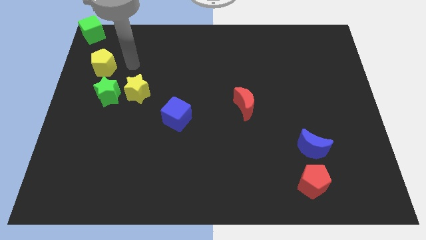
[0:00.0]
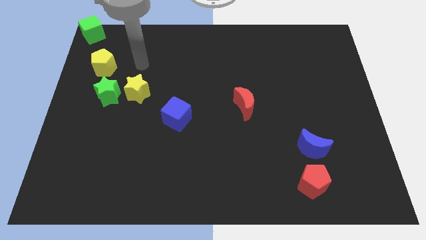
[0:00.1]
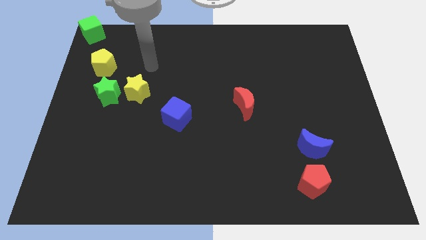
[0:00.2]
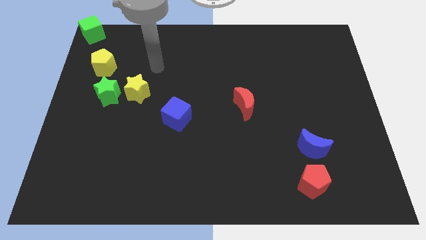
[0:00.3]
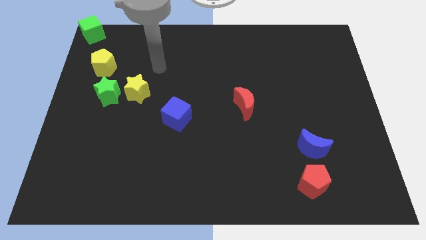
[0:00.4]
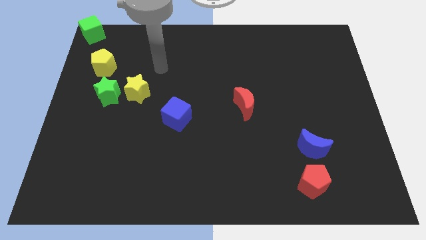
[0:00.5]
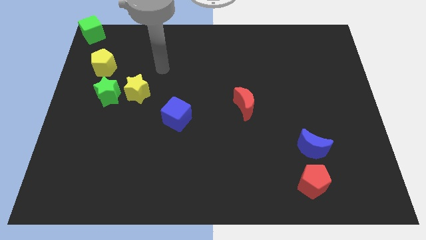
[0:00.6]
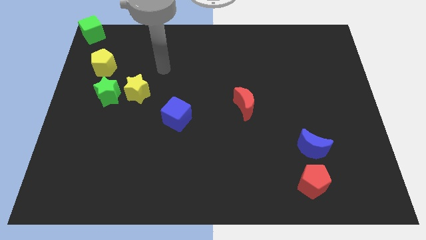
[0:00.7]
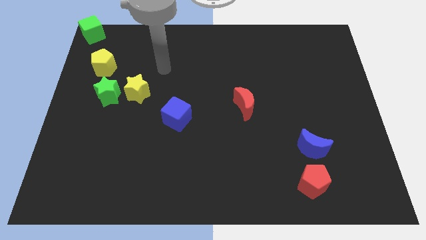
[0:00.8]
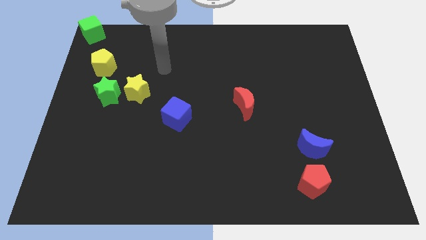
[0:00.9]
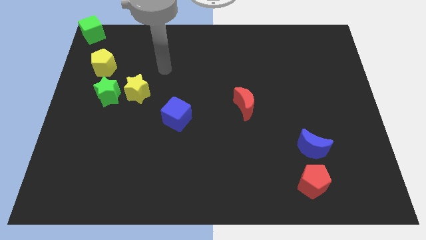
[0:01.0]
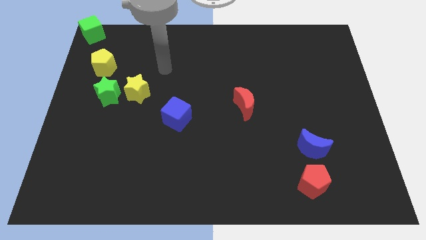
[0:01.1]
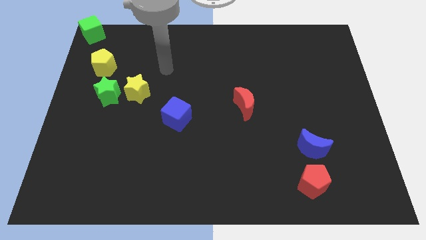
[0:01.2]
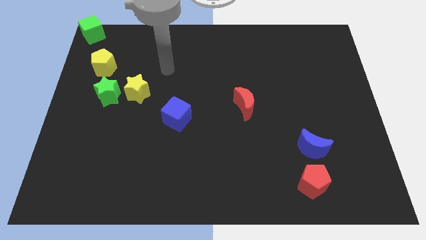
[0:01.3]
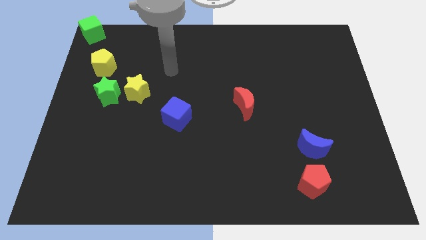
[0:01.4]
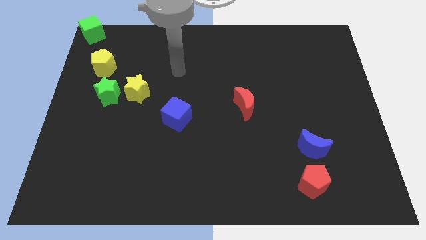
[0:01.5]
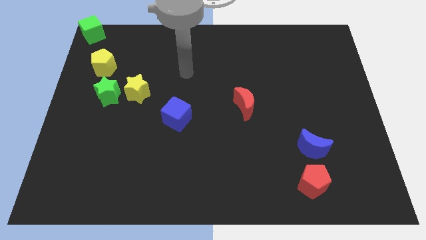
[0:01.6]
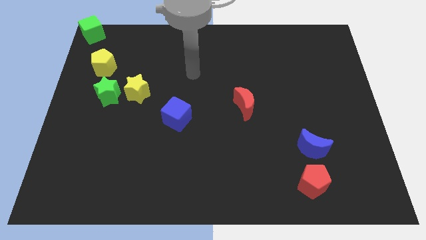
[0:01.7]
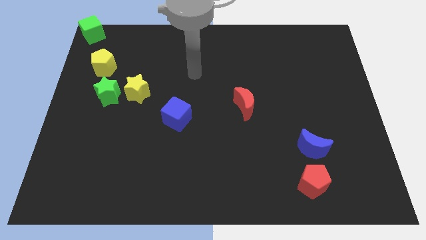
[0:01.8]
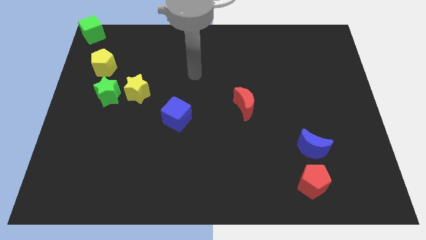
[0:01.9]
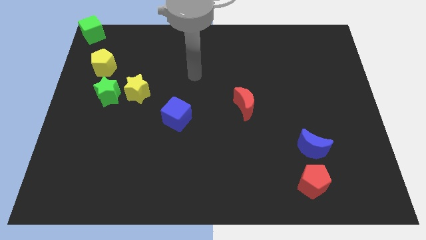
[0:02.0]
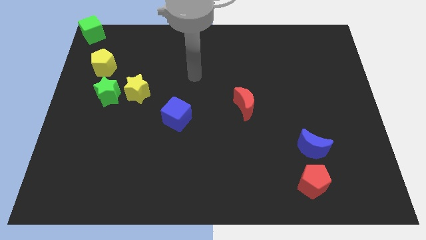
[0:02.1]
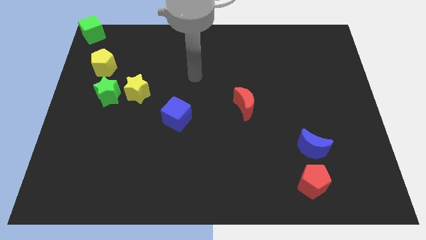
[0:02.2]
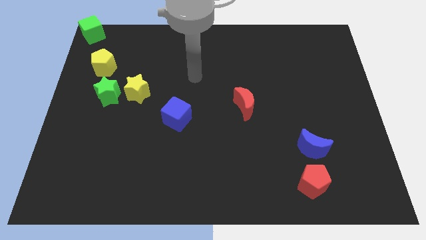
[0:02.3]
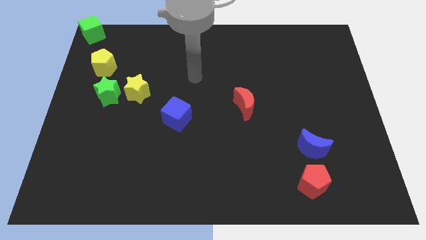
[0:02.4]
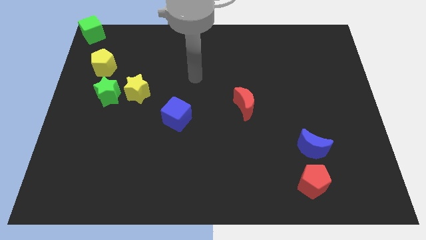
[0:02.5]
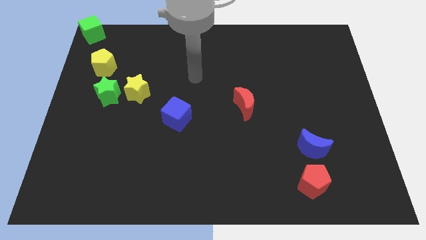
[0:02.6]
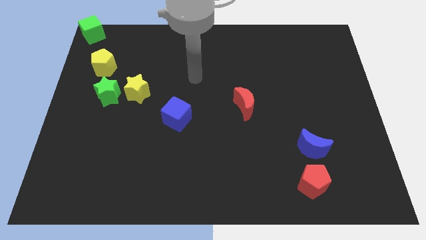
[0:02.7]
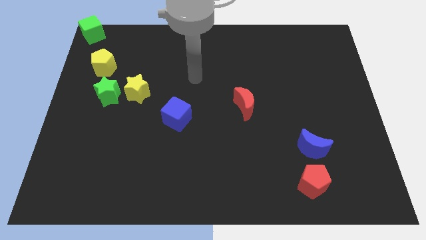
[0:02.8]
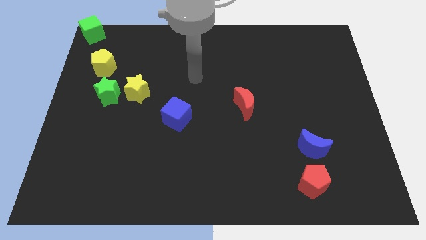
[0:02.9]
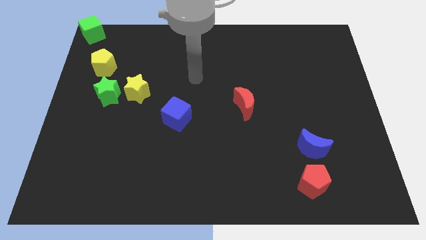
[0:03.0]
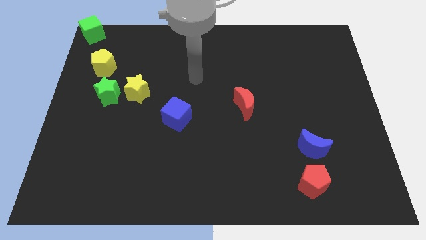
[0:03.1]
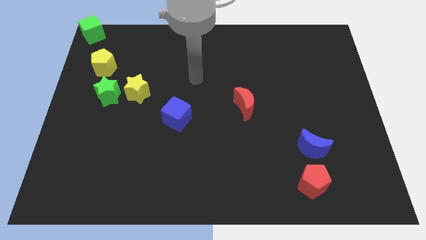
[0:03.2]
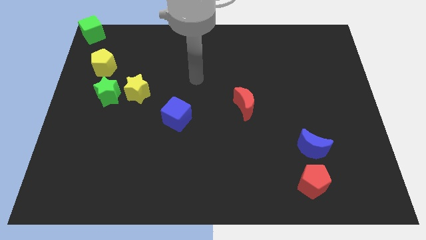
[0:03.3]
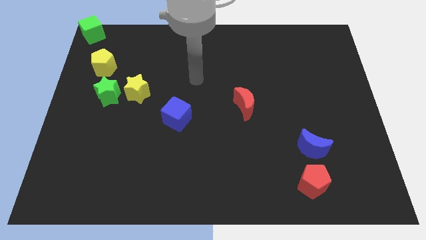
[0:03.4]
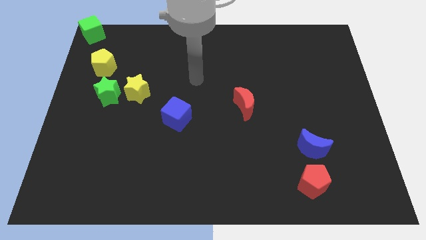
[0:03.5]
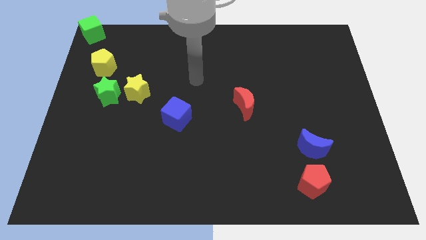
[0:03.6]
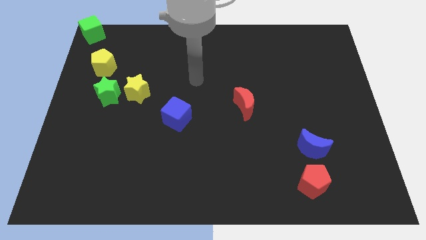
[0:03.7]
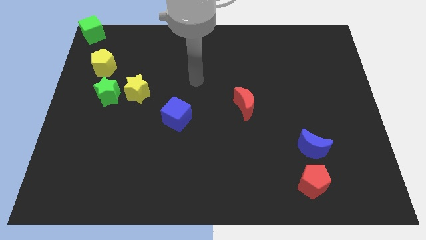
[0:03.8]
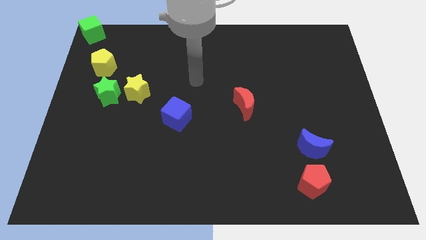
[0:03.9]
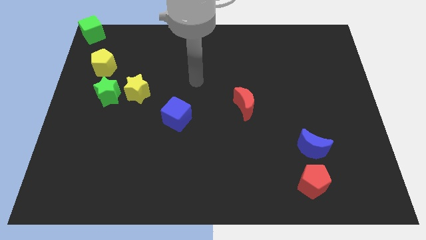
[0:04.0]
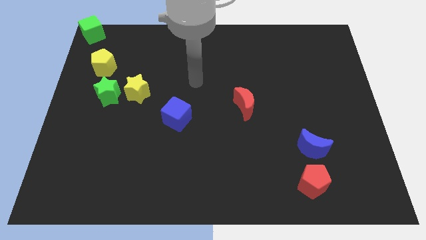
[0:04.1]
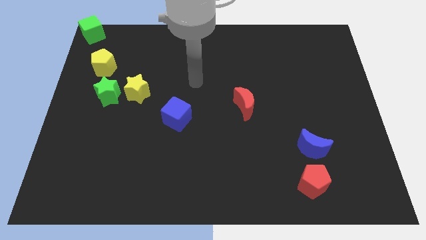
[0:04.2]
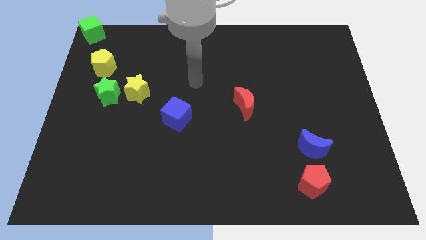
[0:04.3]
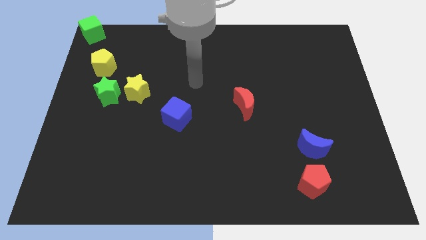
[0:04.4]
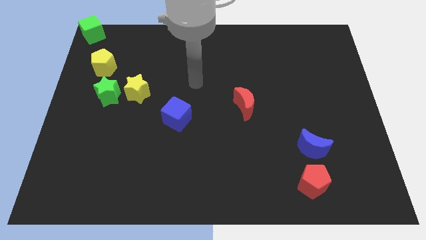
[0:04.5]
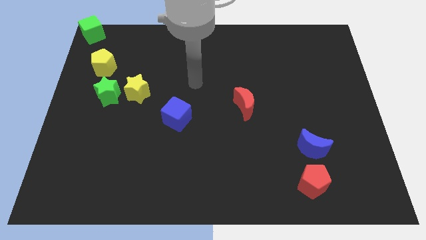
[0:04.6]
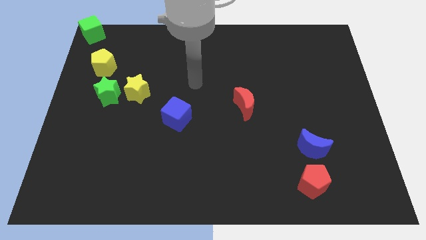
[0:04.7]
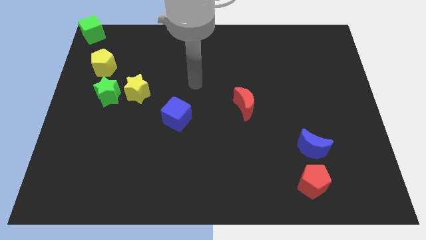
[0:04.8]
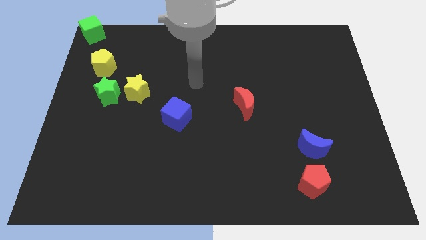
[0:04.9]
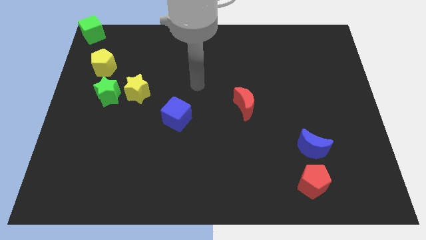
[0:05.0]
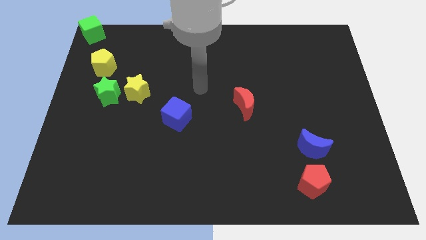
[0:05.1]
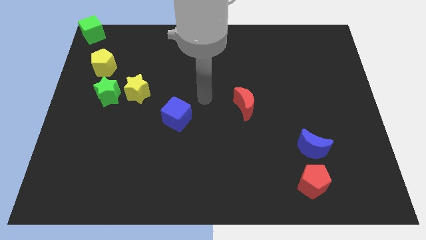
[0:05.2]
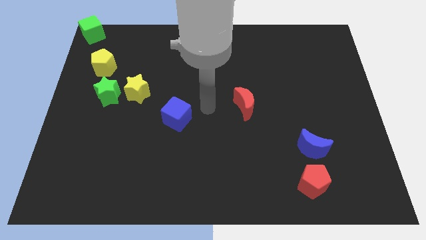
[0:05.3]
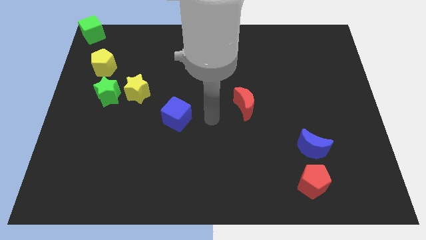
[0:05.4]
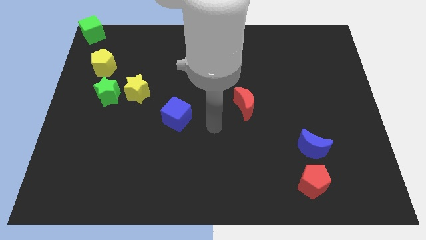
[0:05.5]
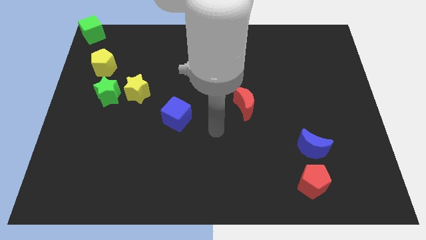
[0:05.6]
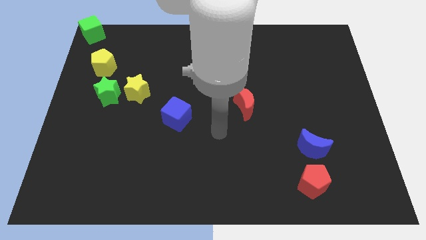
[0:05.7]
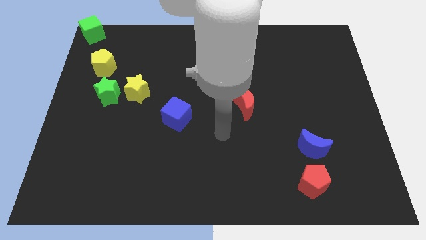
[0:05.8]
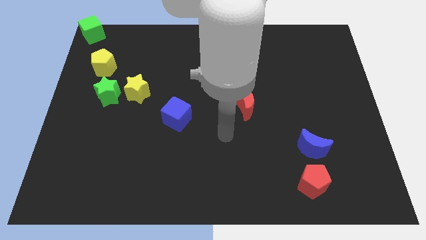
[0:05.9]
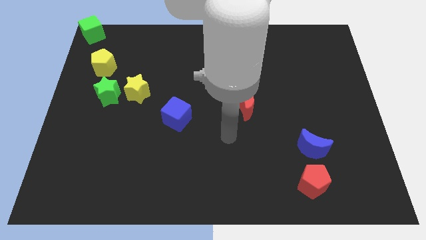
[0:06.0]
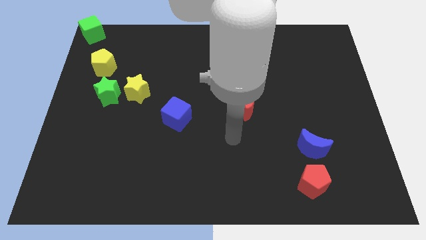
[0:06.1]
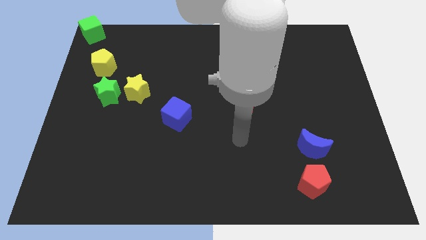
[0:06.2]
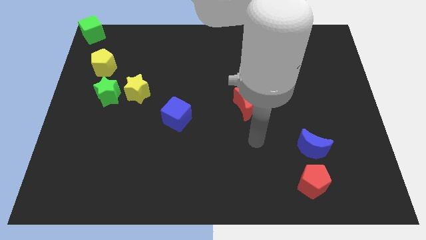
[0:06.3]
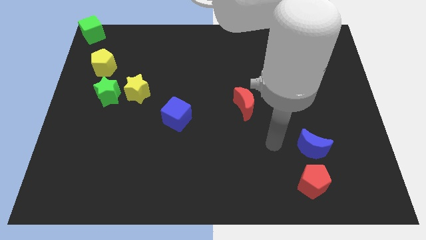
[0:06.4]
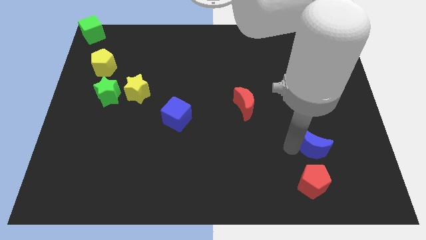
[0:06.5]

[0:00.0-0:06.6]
move your arm towards the blue crescent

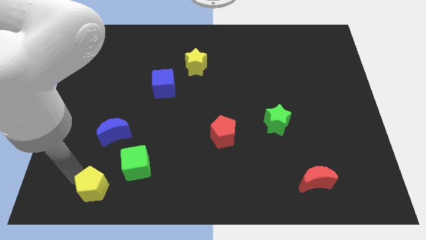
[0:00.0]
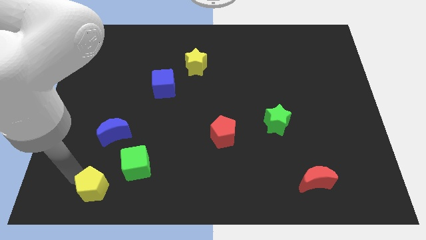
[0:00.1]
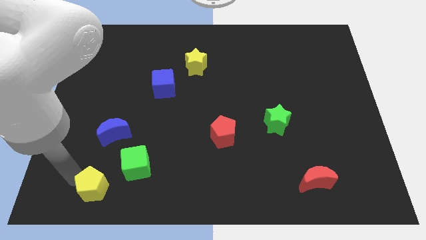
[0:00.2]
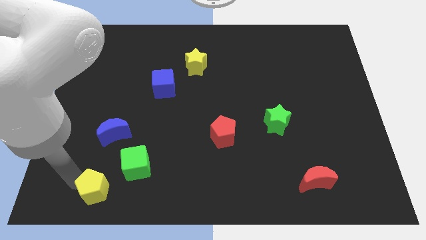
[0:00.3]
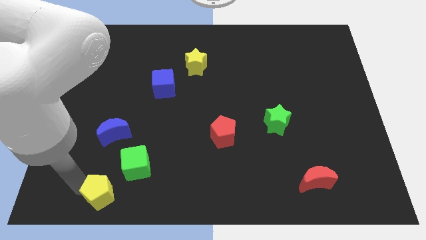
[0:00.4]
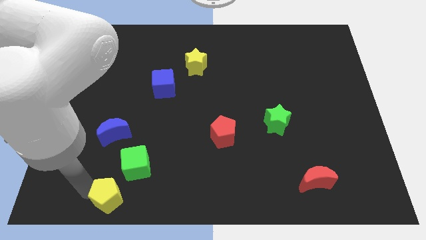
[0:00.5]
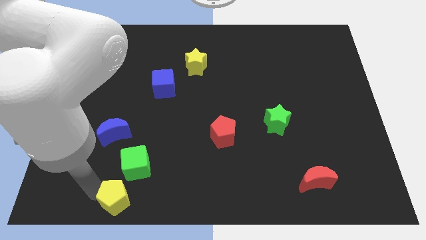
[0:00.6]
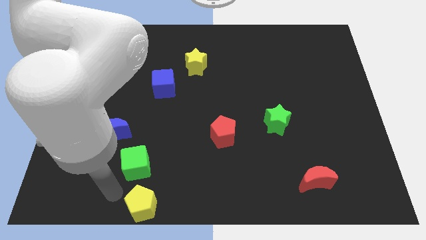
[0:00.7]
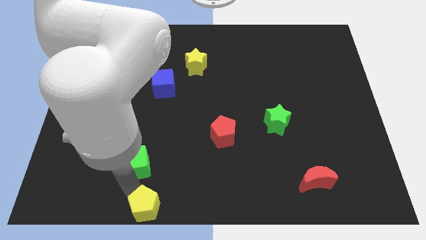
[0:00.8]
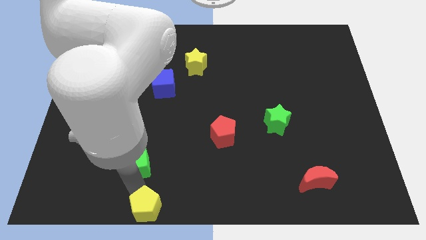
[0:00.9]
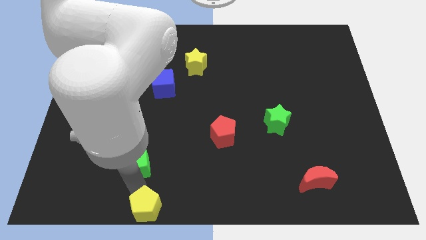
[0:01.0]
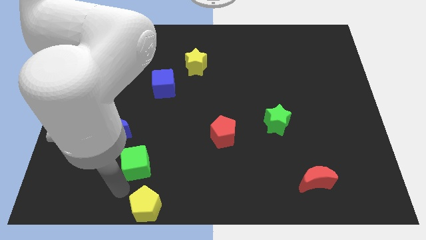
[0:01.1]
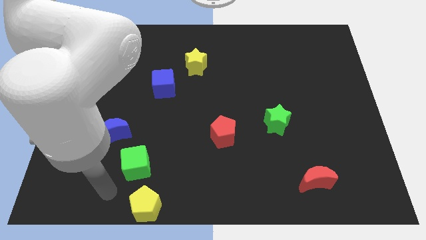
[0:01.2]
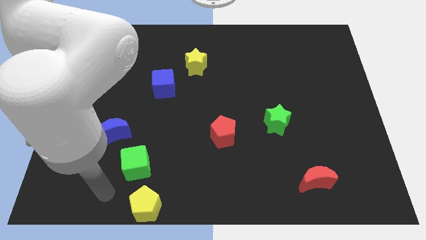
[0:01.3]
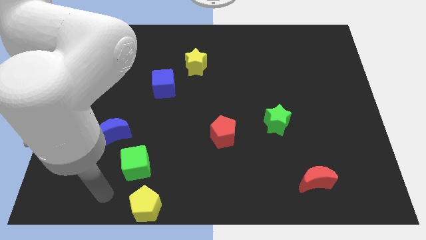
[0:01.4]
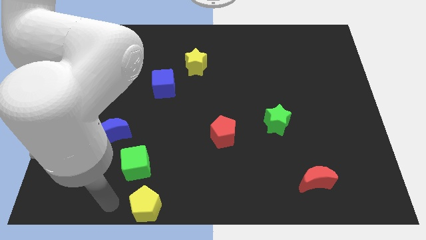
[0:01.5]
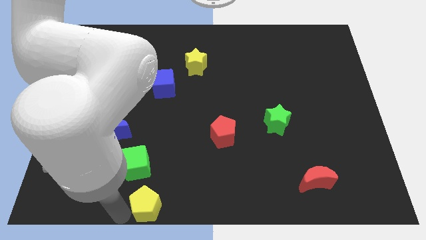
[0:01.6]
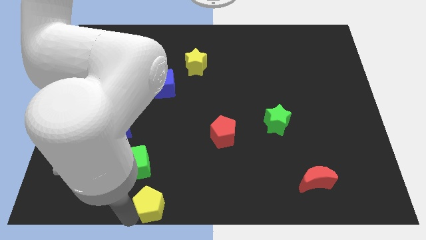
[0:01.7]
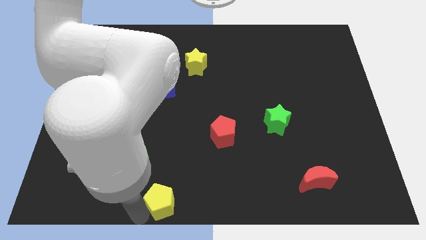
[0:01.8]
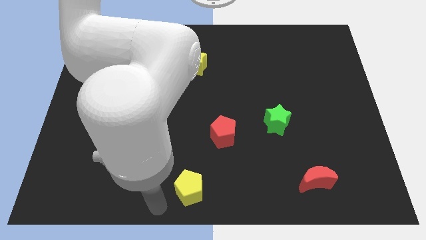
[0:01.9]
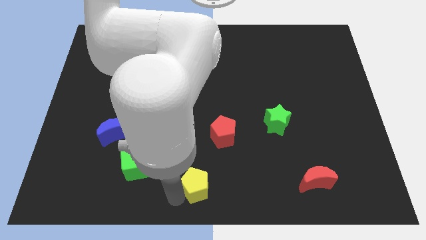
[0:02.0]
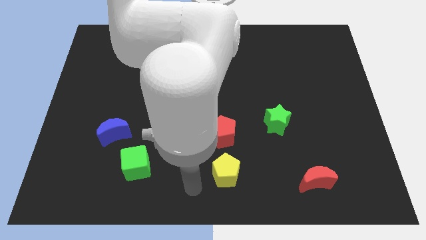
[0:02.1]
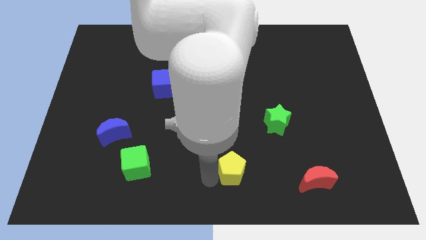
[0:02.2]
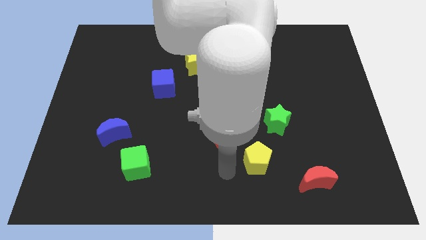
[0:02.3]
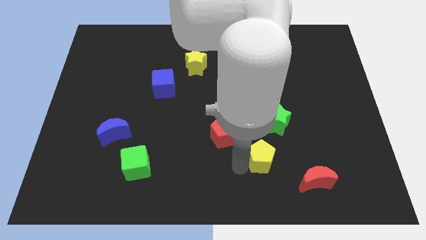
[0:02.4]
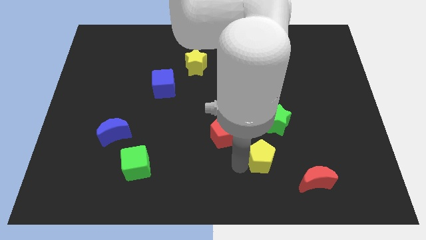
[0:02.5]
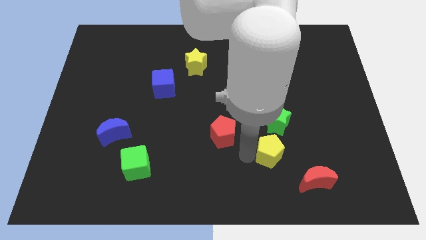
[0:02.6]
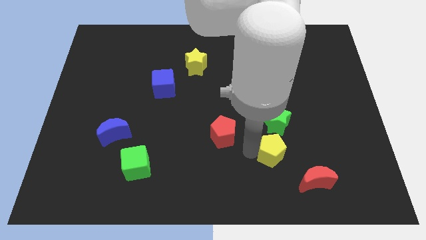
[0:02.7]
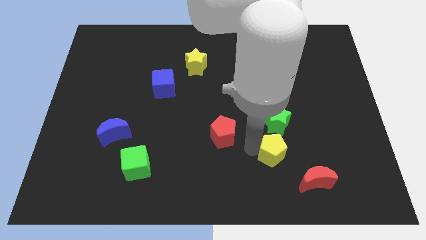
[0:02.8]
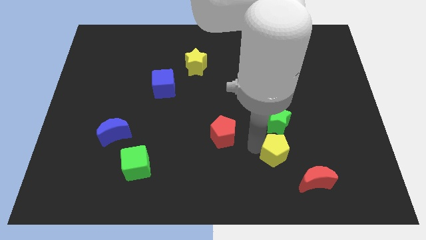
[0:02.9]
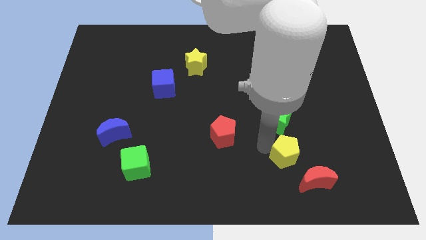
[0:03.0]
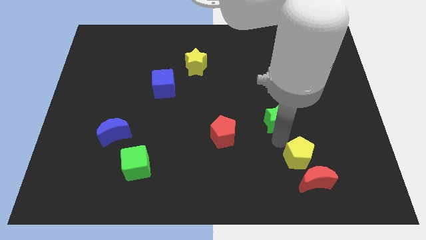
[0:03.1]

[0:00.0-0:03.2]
push the yellow pentagon to the top of red moon
